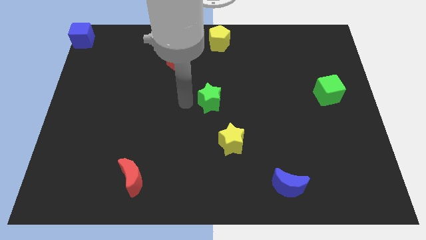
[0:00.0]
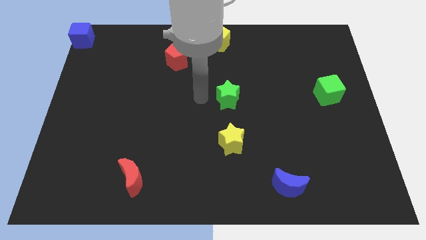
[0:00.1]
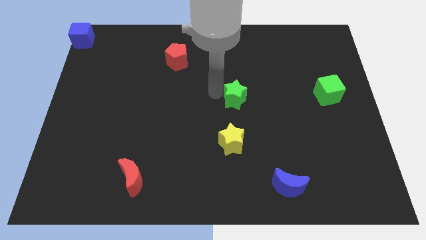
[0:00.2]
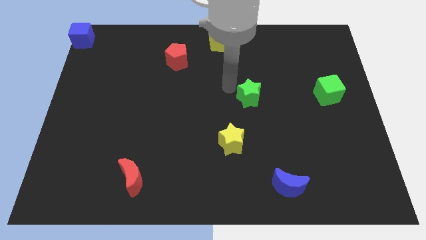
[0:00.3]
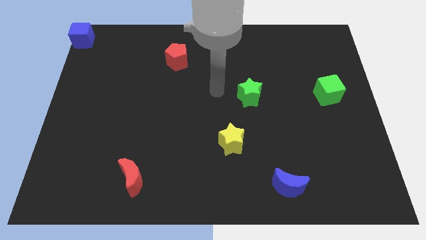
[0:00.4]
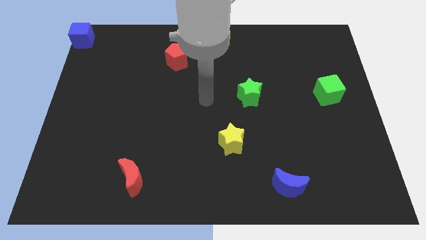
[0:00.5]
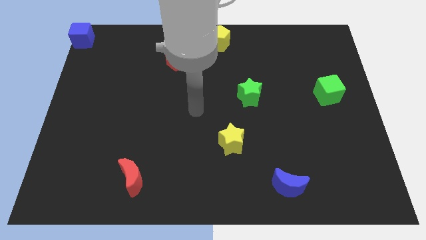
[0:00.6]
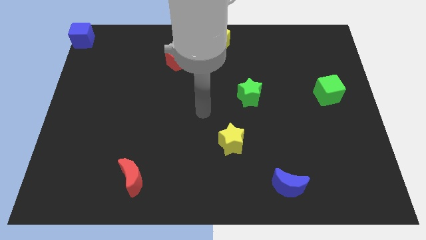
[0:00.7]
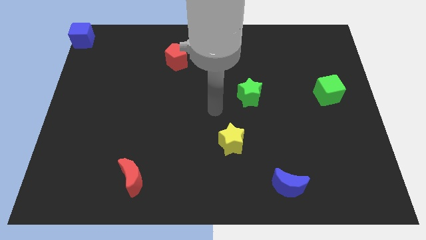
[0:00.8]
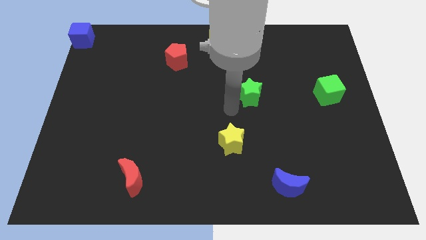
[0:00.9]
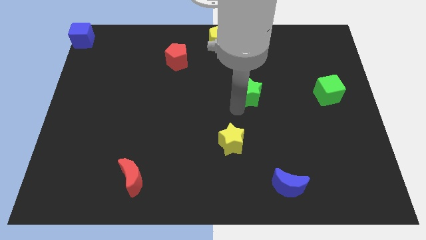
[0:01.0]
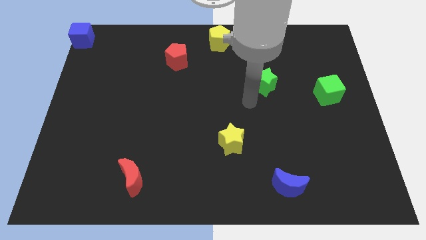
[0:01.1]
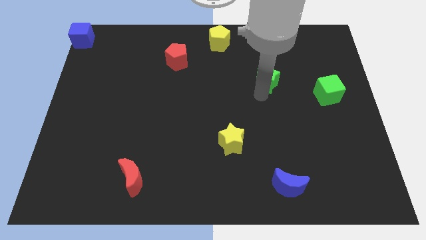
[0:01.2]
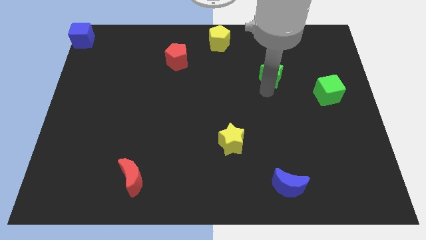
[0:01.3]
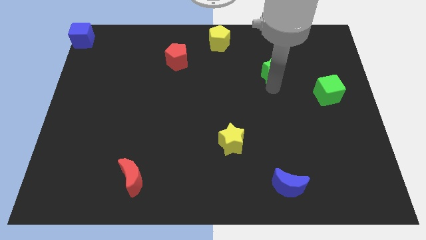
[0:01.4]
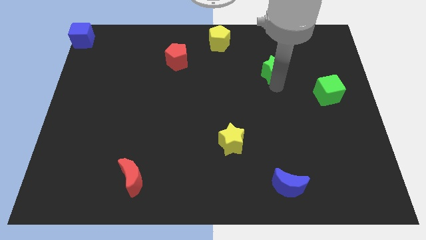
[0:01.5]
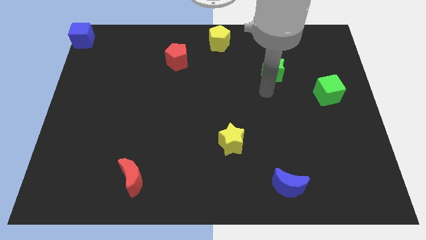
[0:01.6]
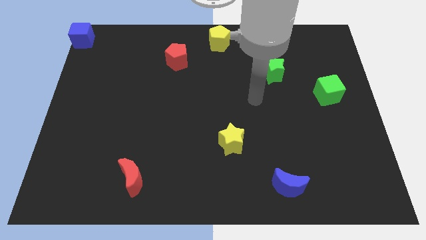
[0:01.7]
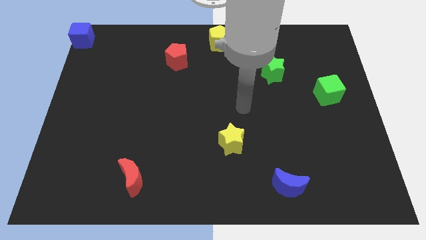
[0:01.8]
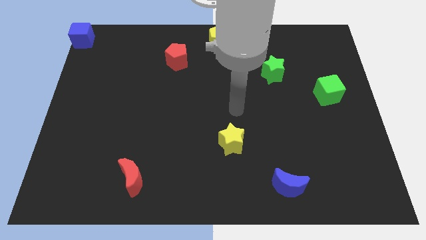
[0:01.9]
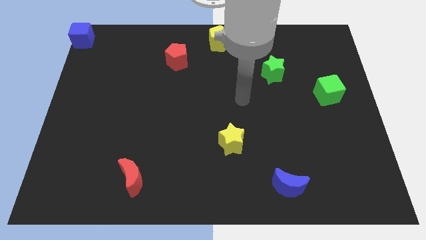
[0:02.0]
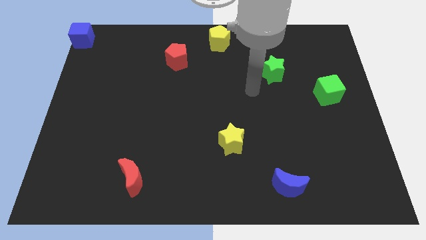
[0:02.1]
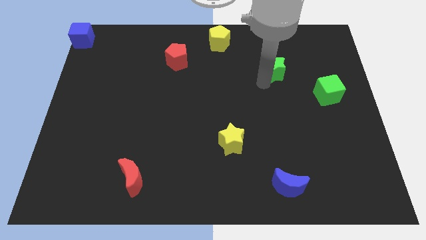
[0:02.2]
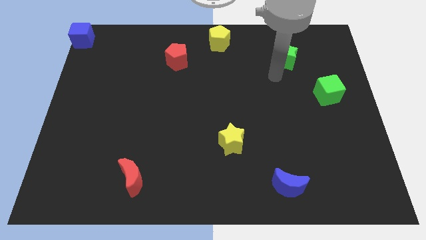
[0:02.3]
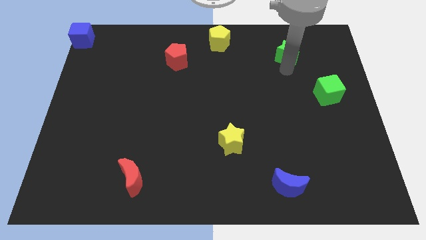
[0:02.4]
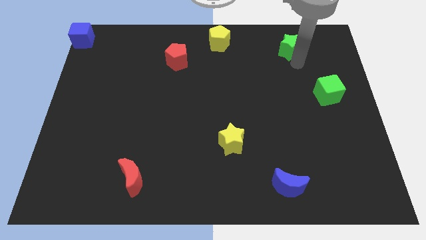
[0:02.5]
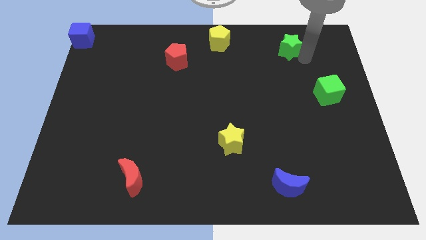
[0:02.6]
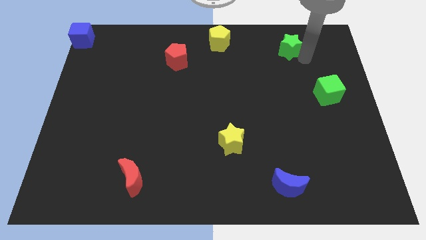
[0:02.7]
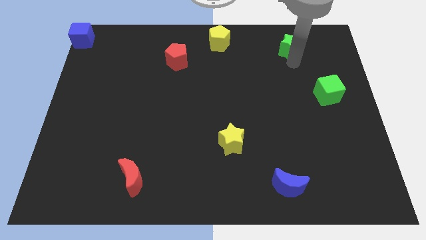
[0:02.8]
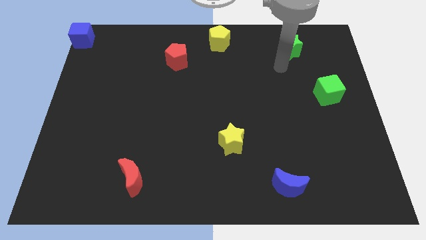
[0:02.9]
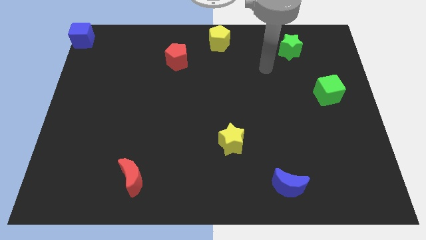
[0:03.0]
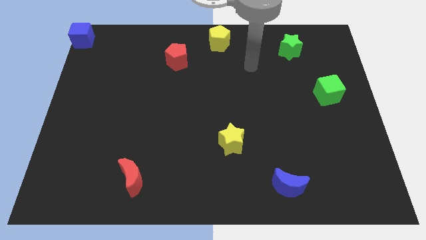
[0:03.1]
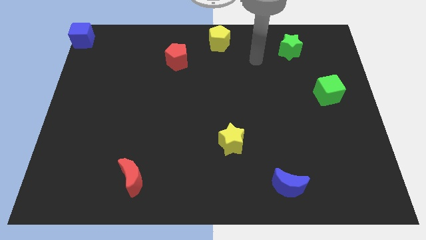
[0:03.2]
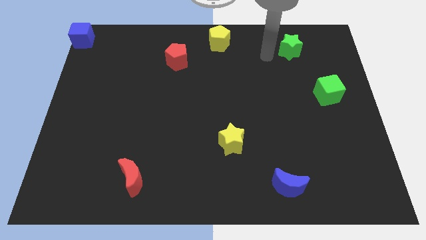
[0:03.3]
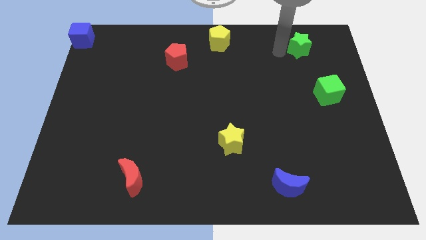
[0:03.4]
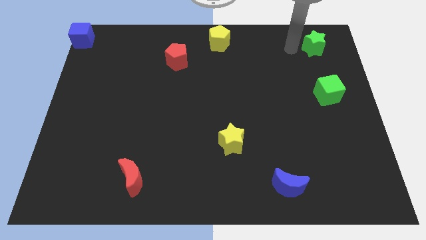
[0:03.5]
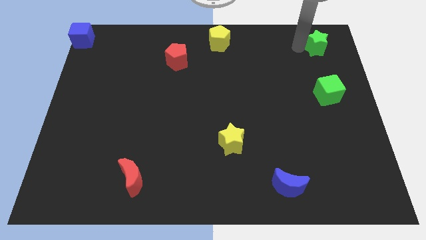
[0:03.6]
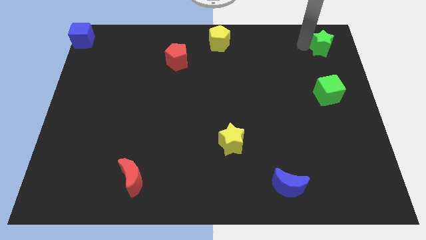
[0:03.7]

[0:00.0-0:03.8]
place the green star at the top of green cube

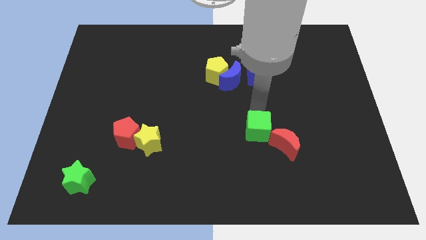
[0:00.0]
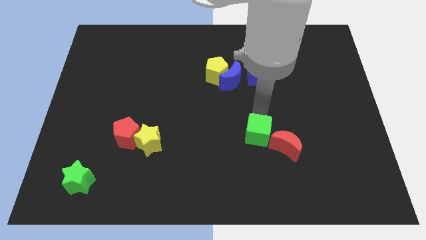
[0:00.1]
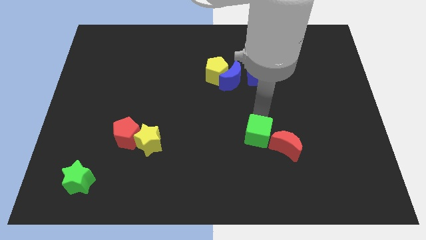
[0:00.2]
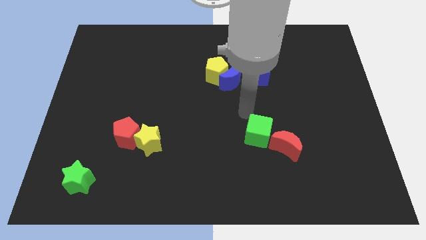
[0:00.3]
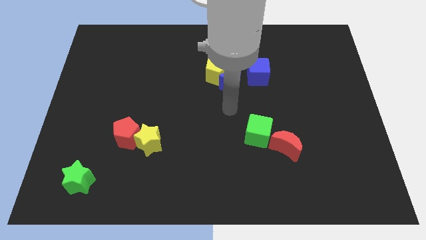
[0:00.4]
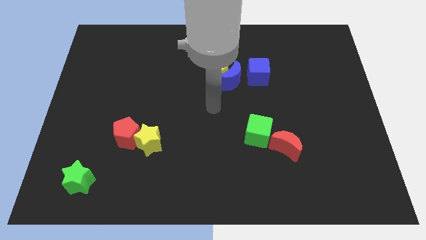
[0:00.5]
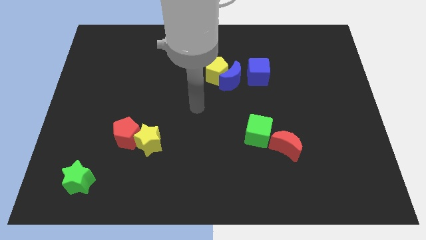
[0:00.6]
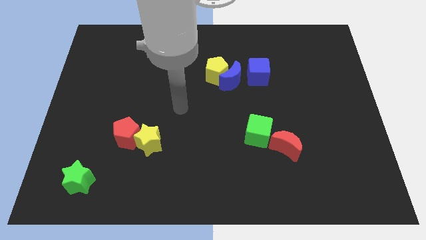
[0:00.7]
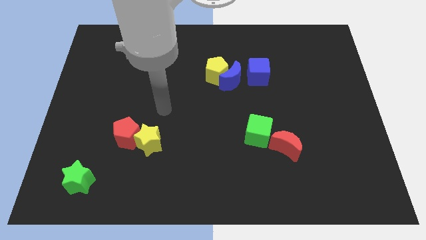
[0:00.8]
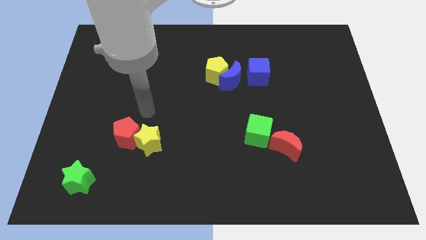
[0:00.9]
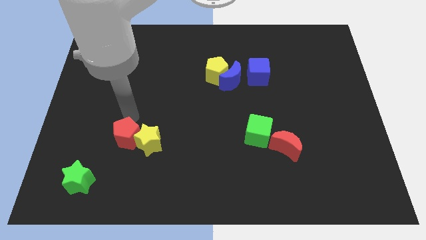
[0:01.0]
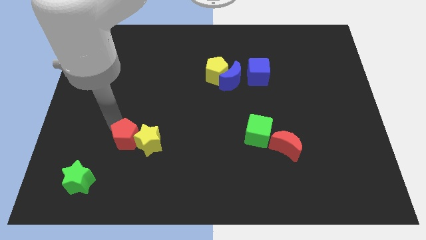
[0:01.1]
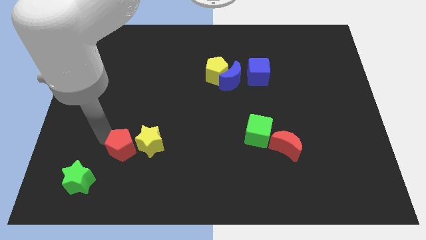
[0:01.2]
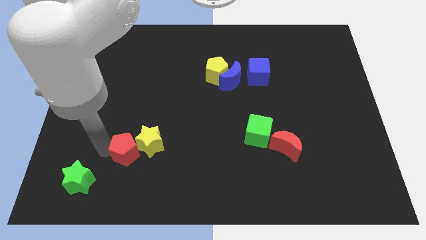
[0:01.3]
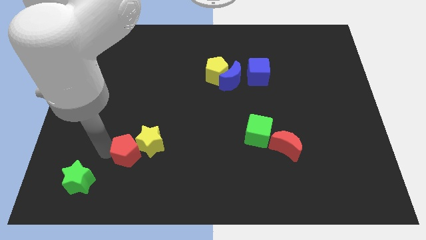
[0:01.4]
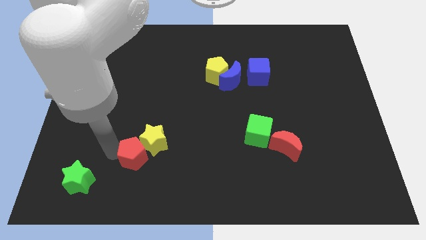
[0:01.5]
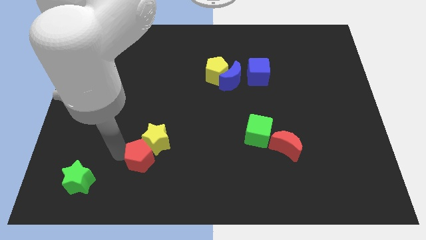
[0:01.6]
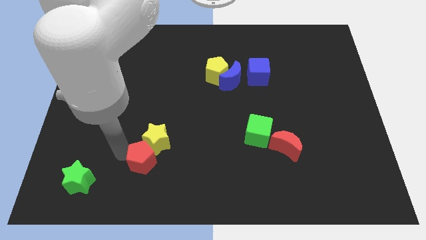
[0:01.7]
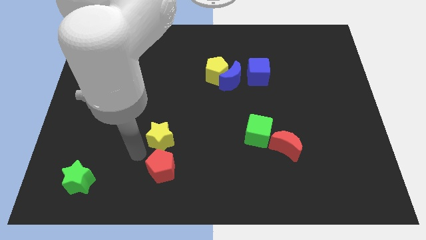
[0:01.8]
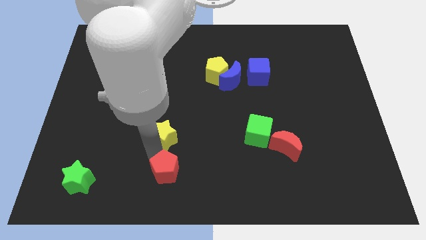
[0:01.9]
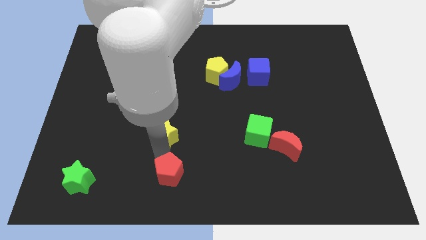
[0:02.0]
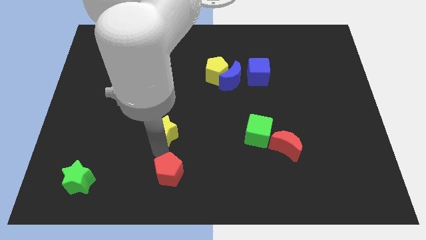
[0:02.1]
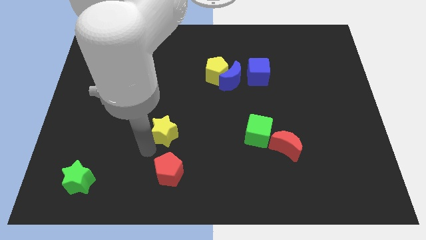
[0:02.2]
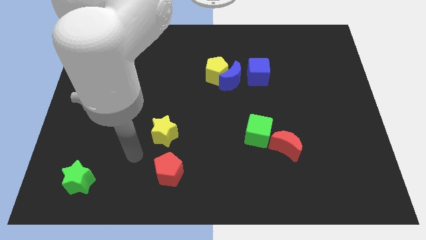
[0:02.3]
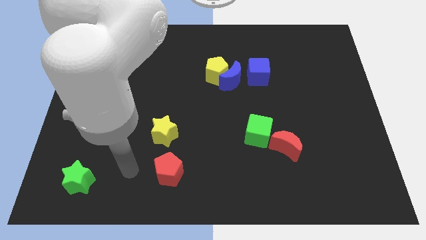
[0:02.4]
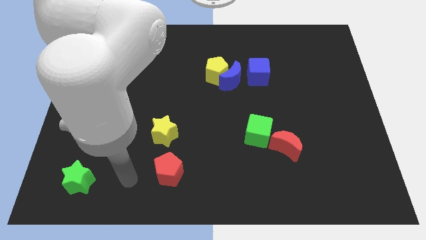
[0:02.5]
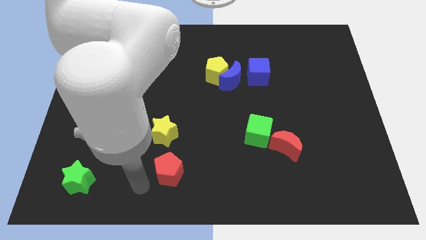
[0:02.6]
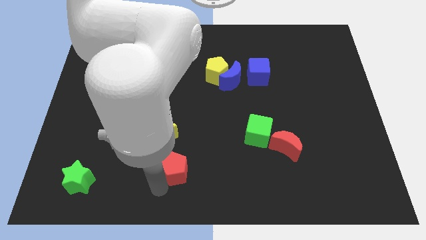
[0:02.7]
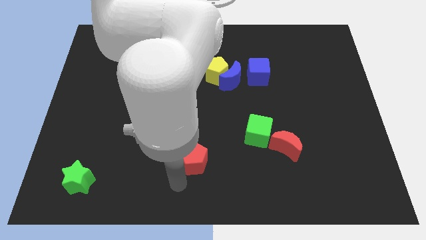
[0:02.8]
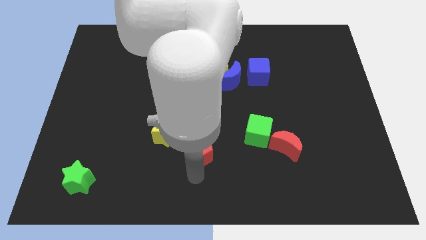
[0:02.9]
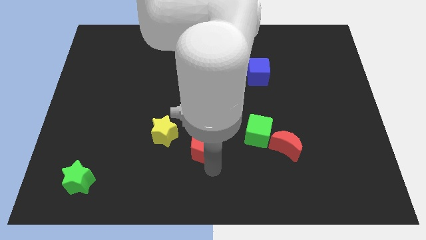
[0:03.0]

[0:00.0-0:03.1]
separate red pentagon from yellow star

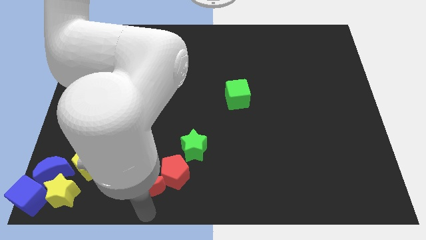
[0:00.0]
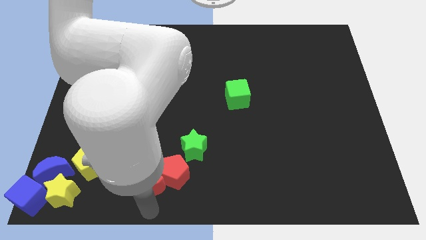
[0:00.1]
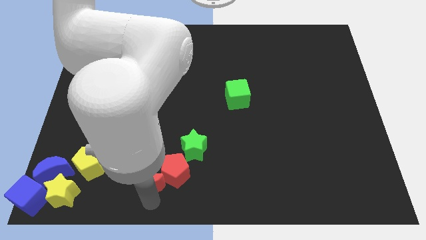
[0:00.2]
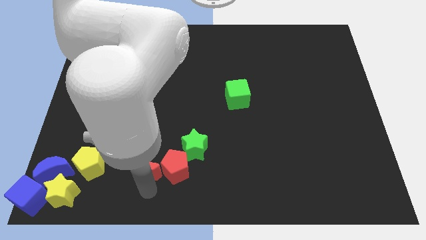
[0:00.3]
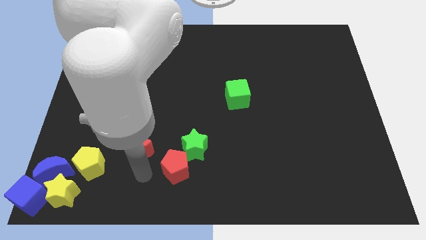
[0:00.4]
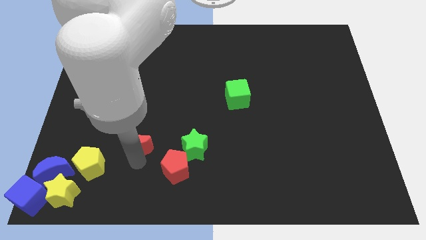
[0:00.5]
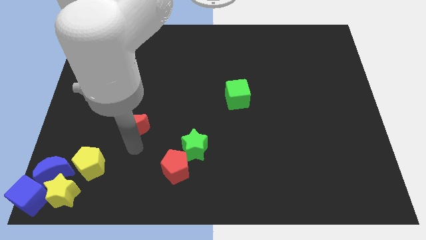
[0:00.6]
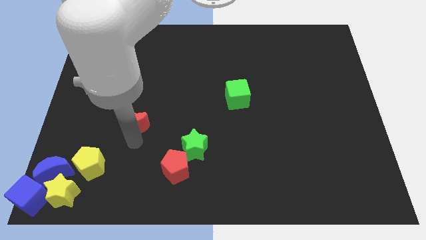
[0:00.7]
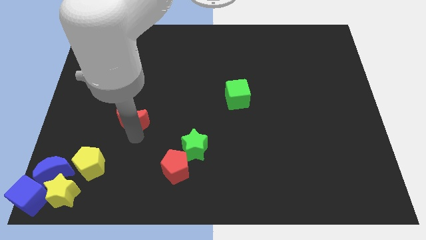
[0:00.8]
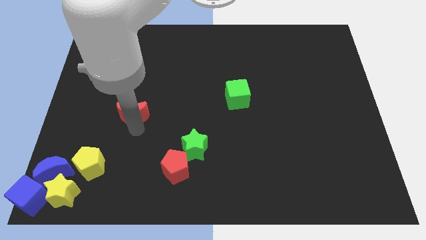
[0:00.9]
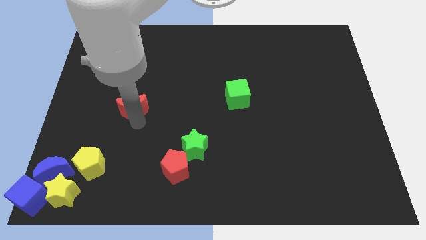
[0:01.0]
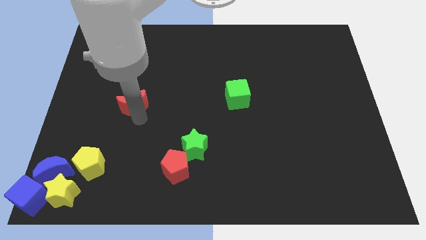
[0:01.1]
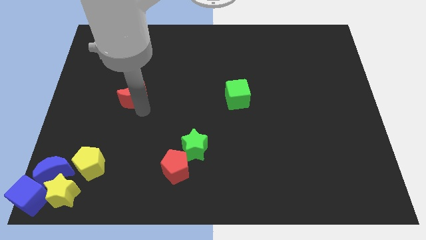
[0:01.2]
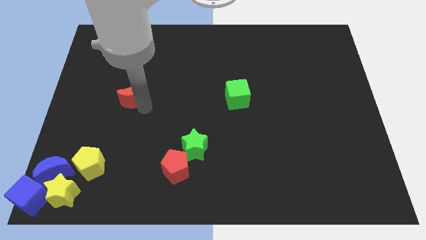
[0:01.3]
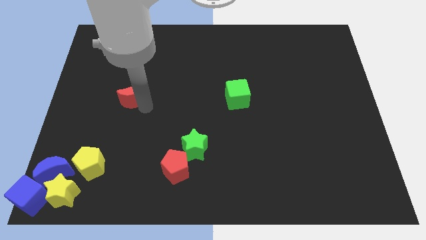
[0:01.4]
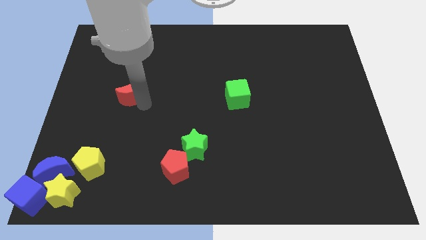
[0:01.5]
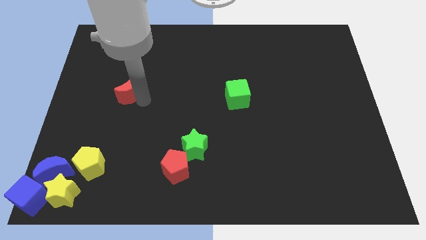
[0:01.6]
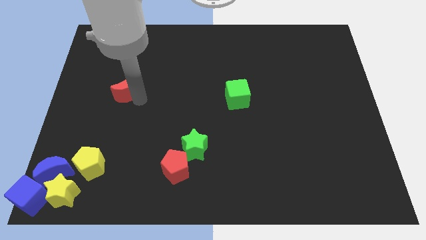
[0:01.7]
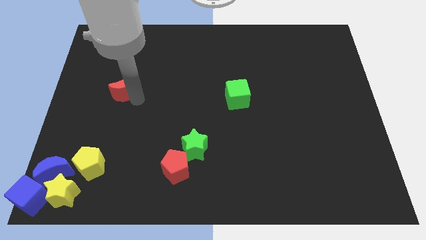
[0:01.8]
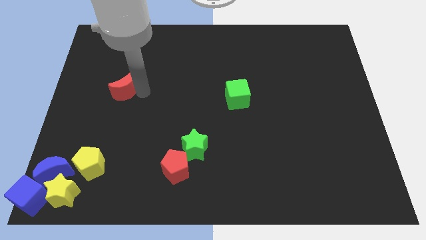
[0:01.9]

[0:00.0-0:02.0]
separate red moon from the red pentagon

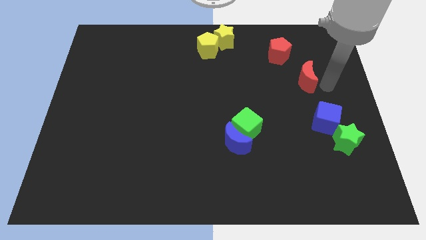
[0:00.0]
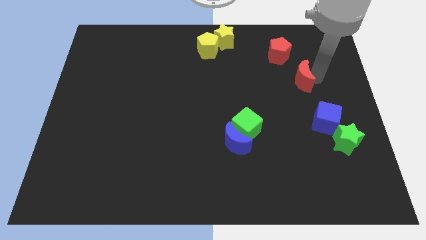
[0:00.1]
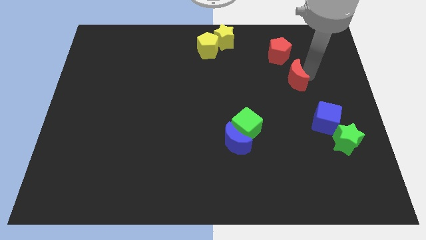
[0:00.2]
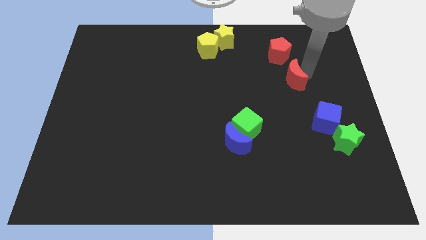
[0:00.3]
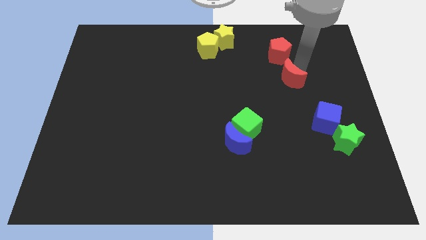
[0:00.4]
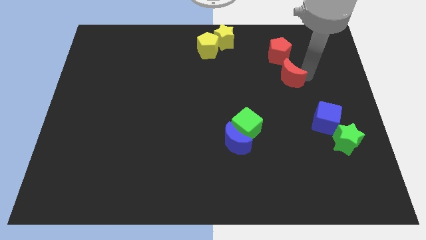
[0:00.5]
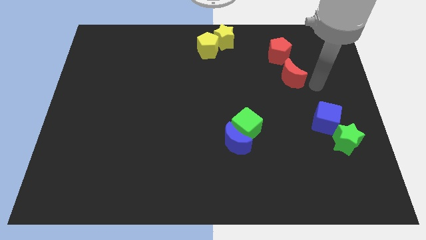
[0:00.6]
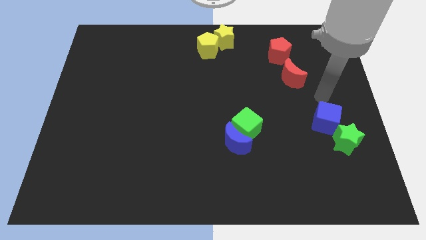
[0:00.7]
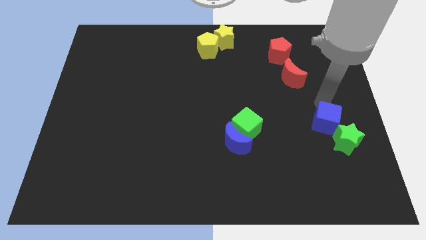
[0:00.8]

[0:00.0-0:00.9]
place the red moon near to the red pentagon
